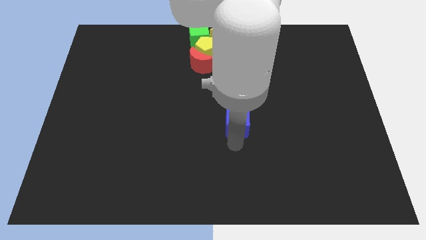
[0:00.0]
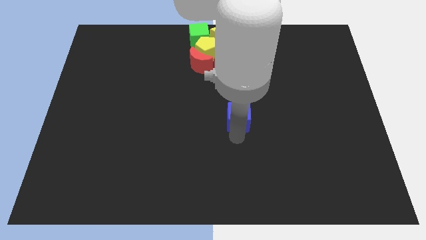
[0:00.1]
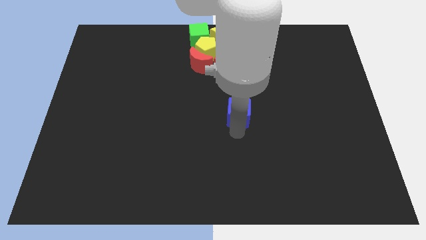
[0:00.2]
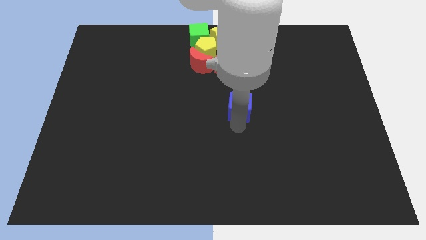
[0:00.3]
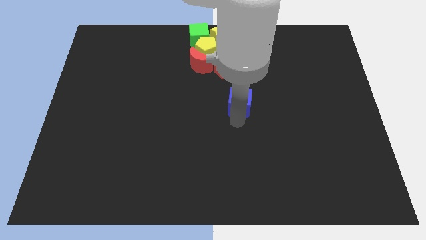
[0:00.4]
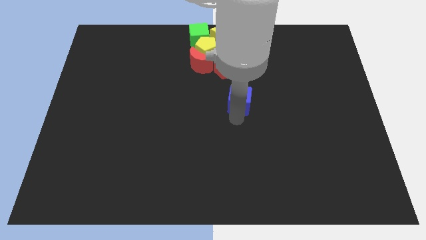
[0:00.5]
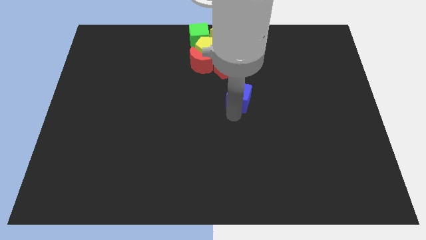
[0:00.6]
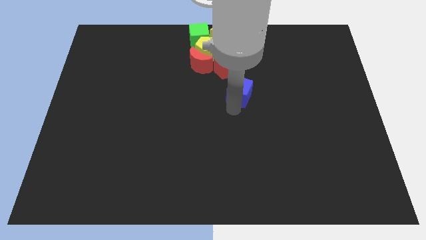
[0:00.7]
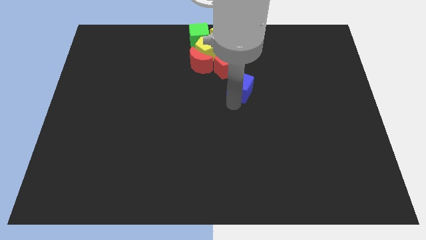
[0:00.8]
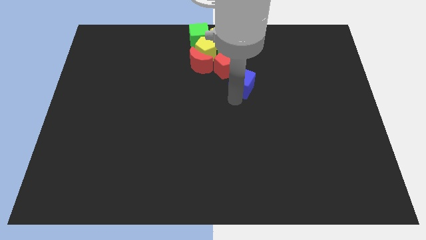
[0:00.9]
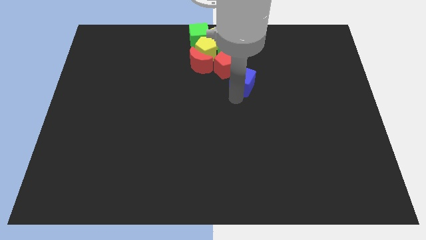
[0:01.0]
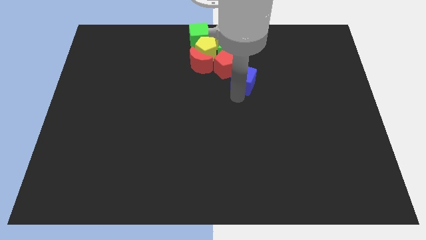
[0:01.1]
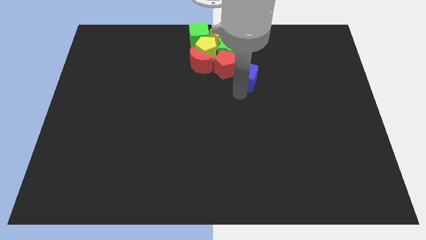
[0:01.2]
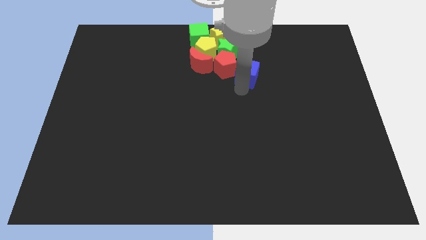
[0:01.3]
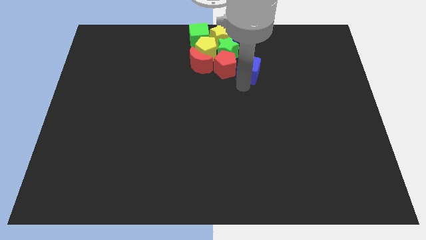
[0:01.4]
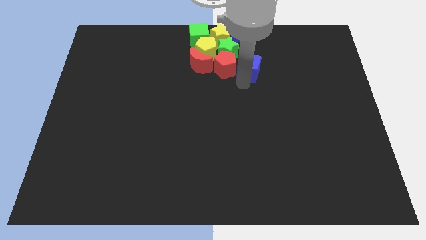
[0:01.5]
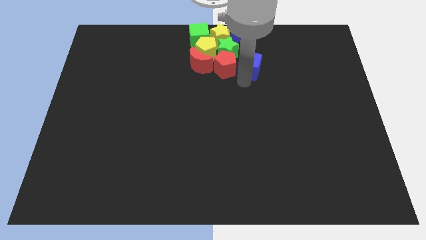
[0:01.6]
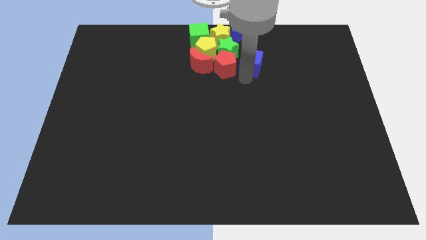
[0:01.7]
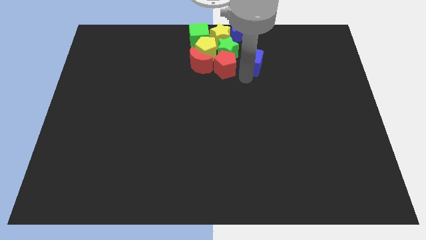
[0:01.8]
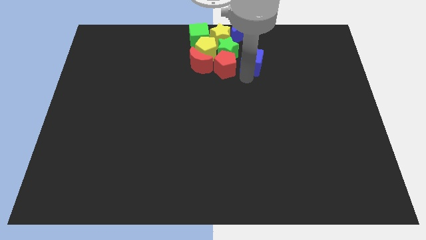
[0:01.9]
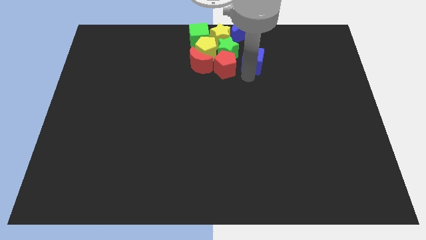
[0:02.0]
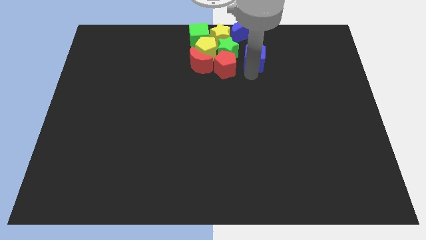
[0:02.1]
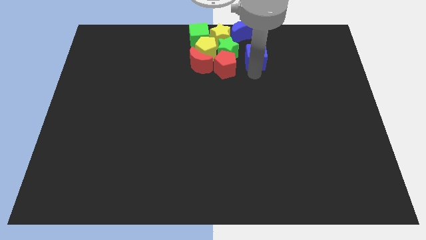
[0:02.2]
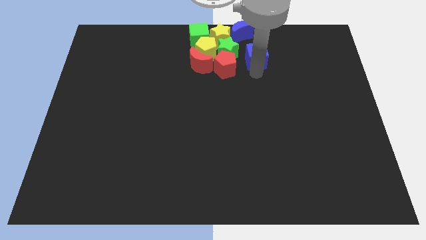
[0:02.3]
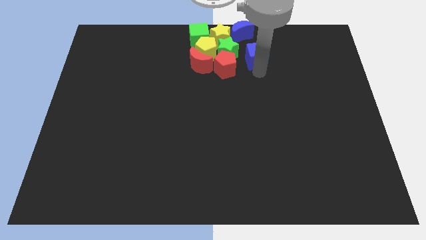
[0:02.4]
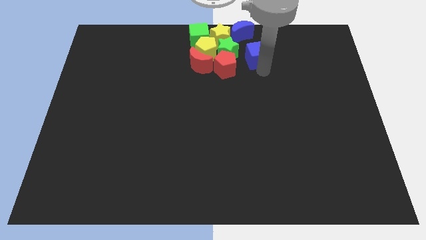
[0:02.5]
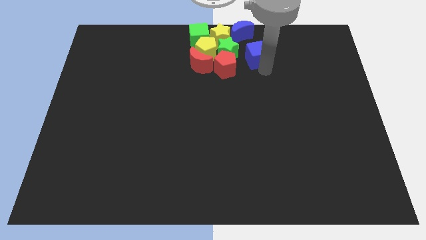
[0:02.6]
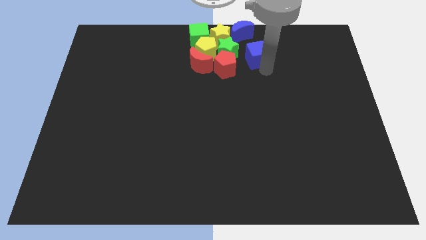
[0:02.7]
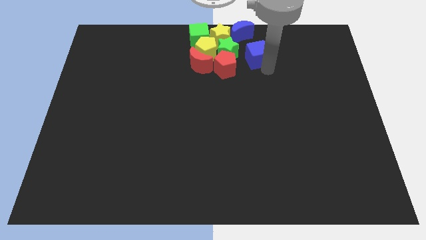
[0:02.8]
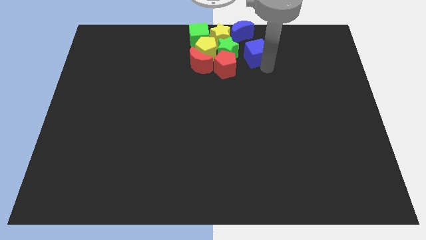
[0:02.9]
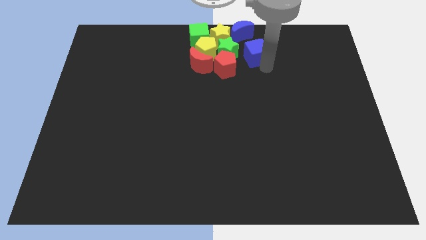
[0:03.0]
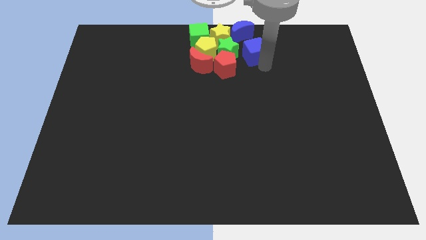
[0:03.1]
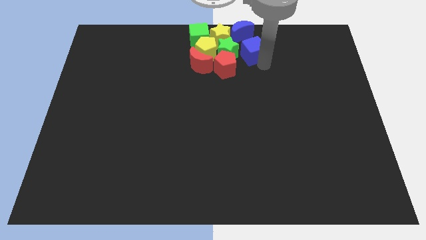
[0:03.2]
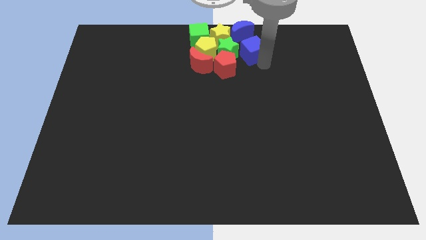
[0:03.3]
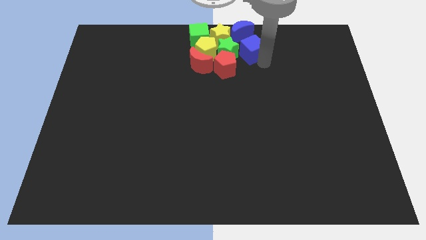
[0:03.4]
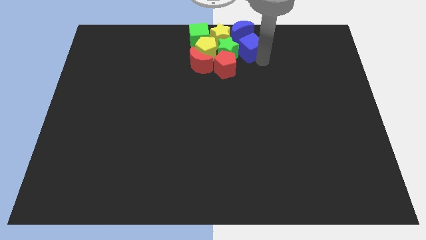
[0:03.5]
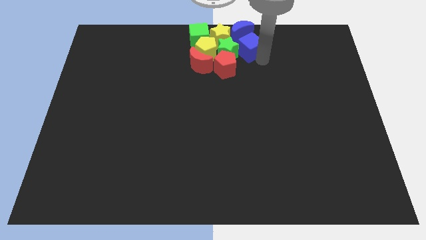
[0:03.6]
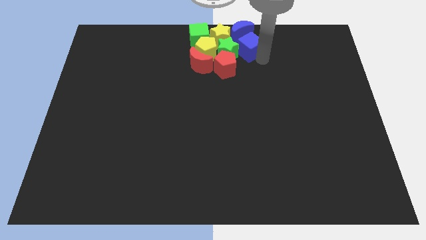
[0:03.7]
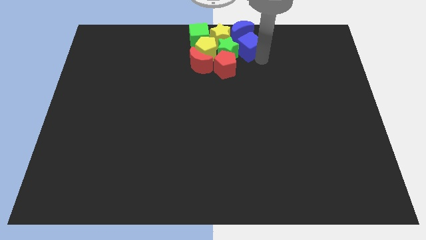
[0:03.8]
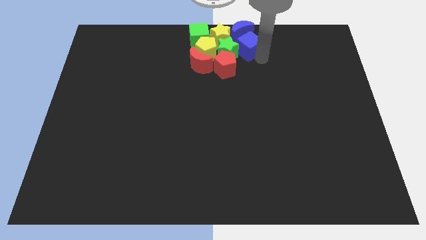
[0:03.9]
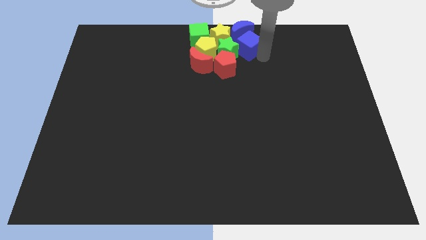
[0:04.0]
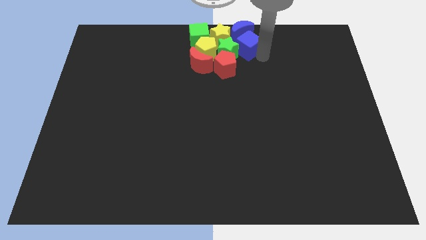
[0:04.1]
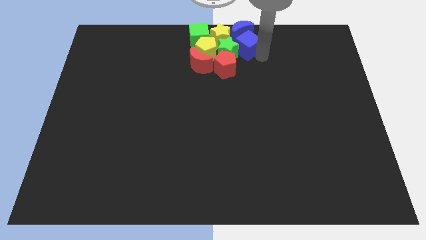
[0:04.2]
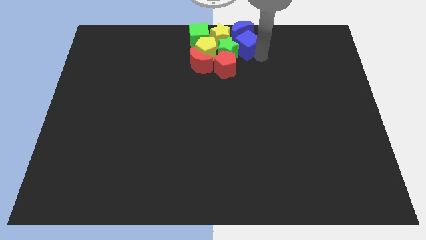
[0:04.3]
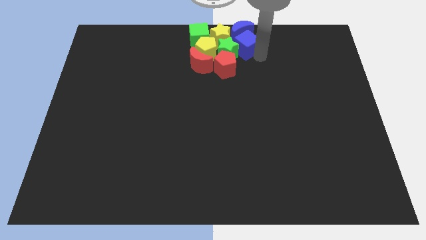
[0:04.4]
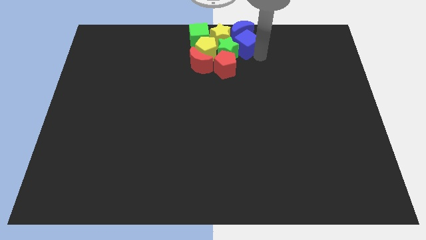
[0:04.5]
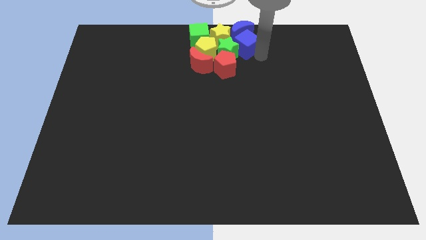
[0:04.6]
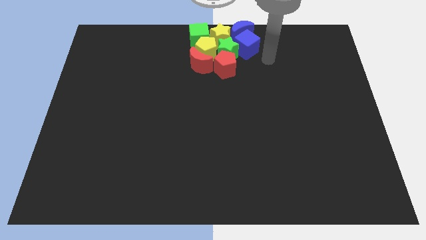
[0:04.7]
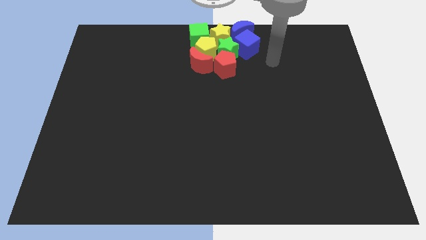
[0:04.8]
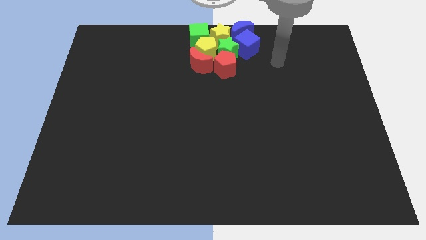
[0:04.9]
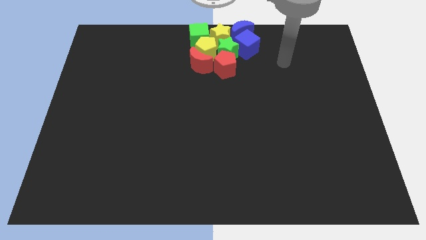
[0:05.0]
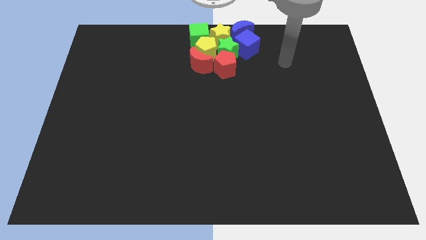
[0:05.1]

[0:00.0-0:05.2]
move the blue cube into the blue crescent

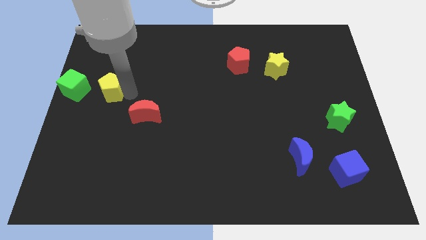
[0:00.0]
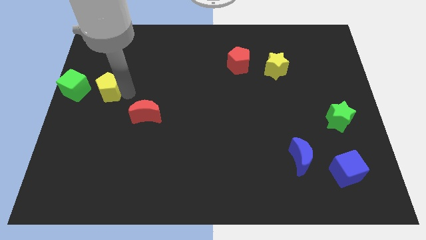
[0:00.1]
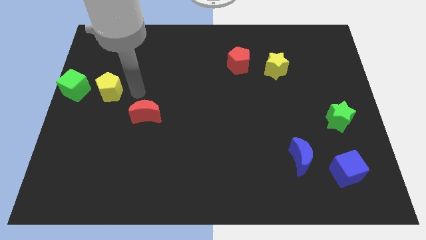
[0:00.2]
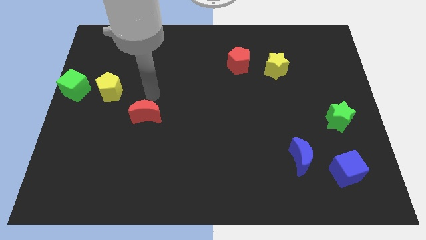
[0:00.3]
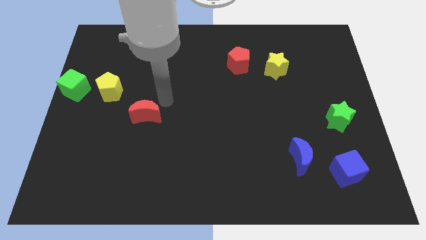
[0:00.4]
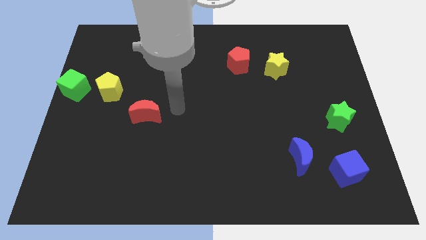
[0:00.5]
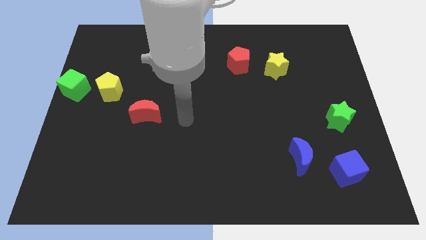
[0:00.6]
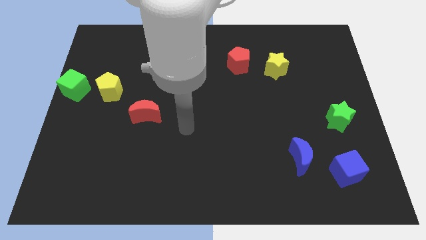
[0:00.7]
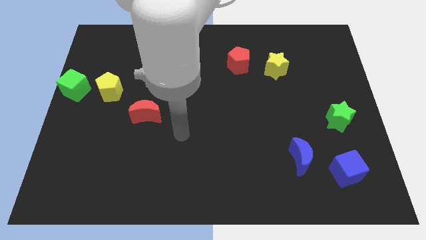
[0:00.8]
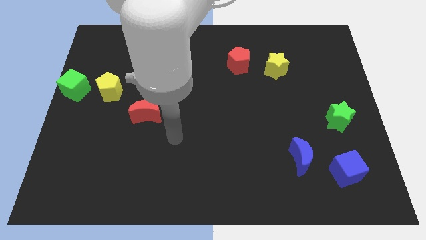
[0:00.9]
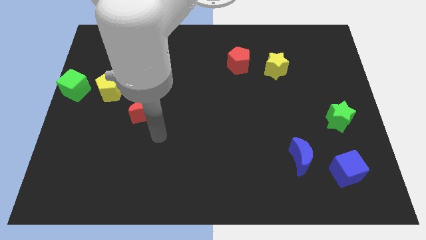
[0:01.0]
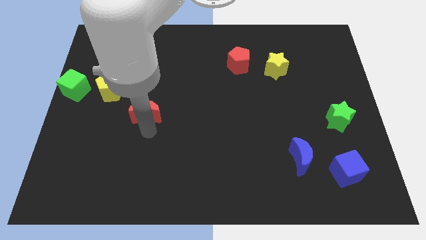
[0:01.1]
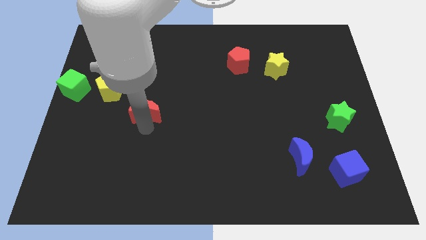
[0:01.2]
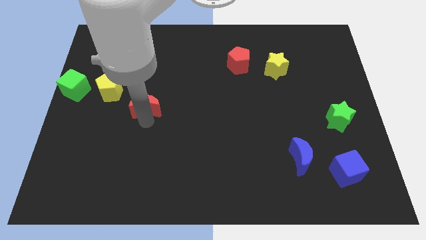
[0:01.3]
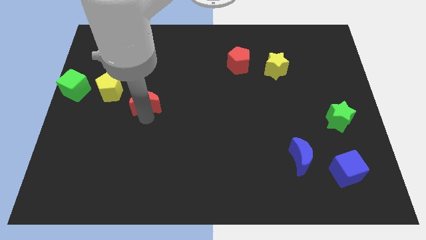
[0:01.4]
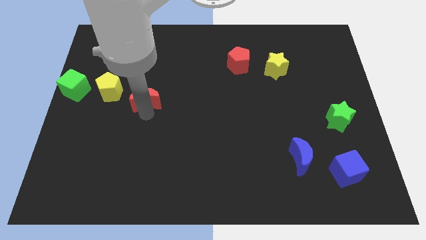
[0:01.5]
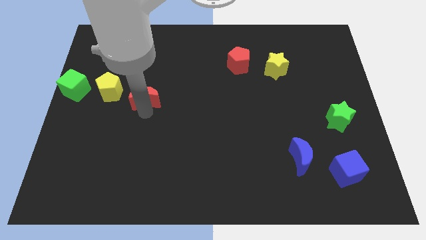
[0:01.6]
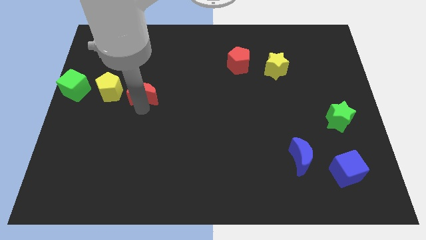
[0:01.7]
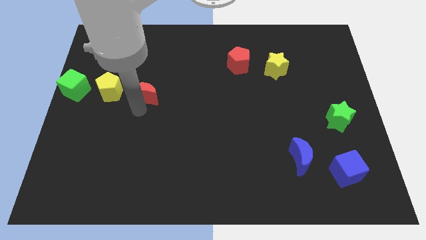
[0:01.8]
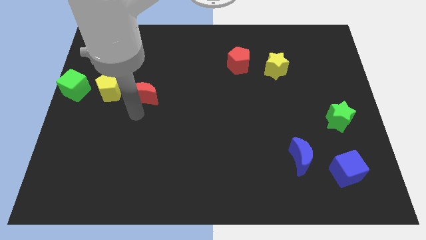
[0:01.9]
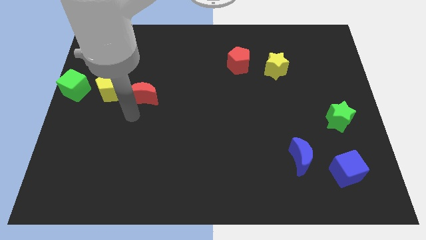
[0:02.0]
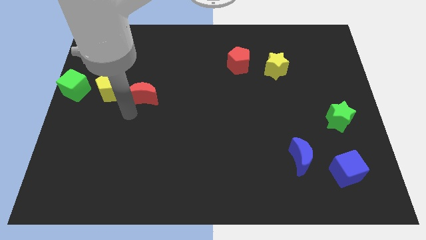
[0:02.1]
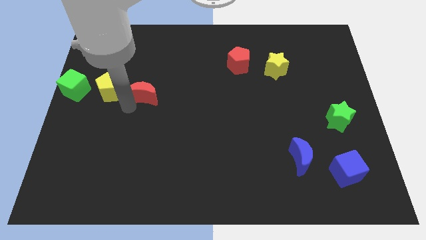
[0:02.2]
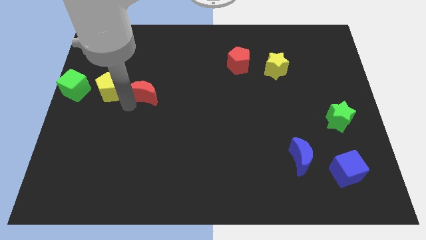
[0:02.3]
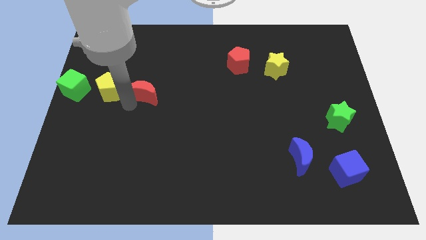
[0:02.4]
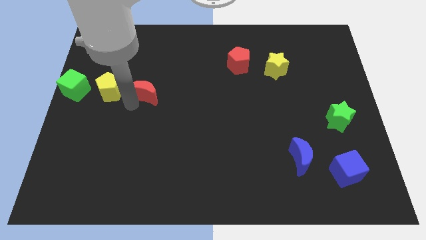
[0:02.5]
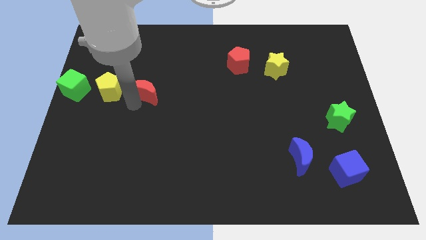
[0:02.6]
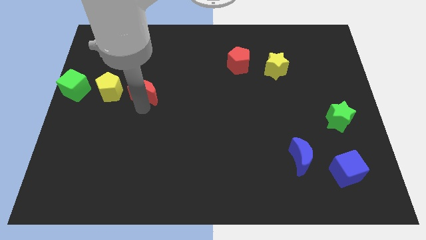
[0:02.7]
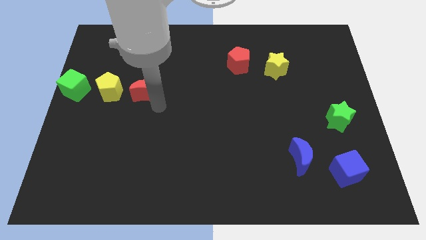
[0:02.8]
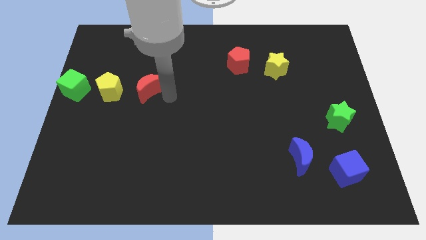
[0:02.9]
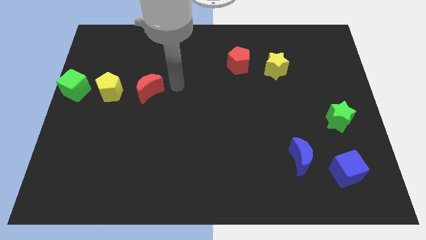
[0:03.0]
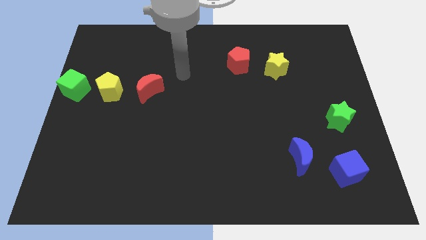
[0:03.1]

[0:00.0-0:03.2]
put the red moon at the right of the horizontal line of blocks

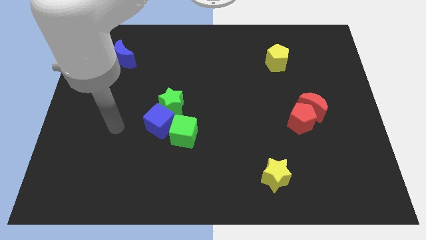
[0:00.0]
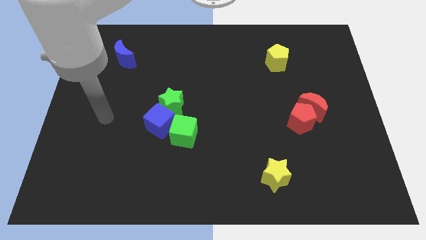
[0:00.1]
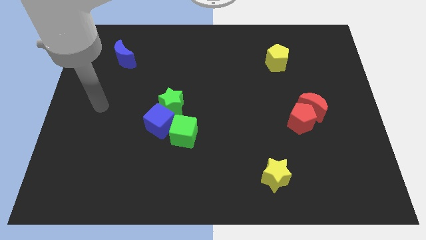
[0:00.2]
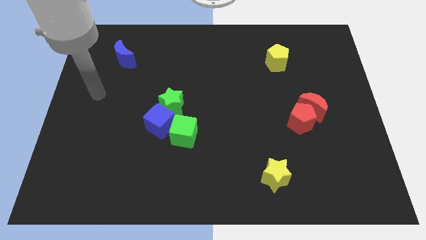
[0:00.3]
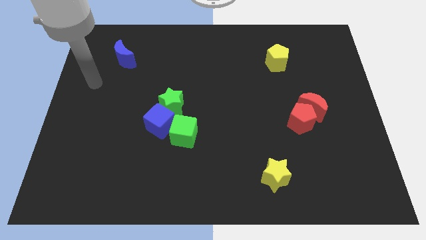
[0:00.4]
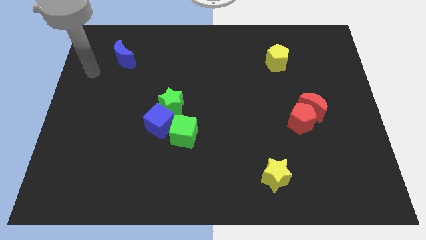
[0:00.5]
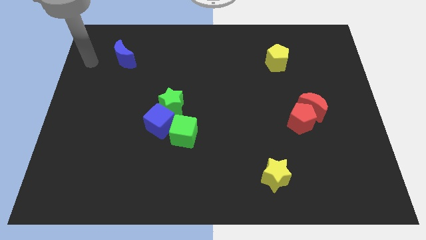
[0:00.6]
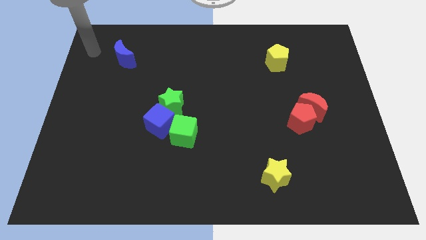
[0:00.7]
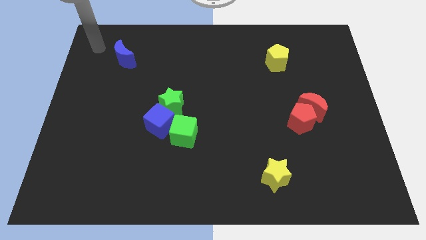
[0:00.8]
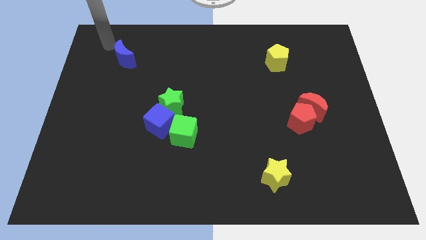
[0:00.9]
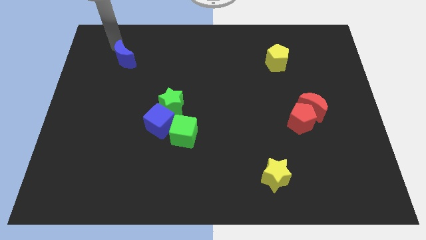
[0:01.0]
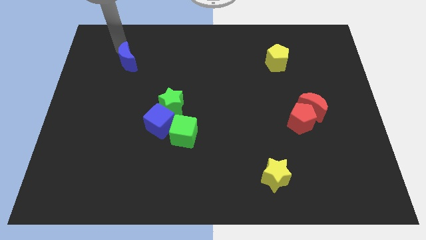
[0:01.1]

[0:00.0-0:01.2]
point your arm at the top left side of the blue crescent
